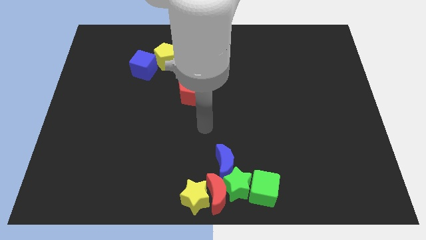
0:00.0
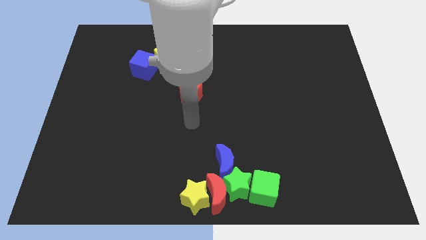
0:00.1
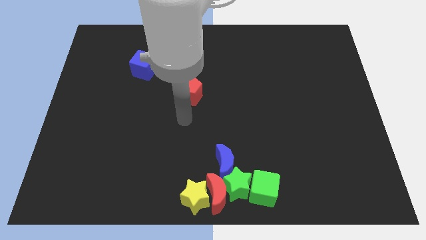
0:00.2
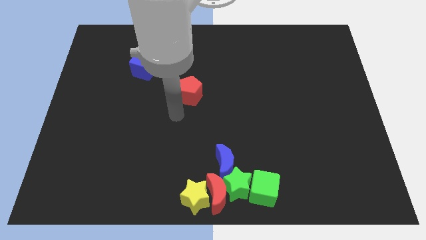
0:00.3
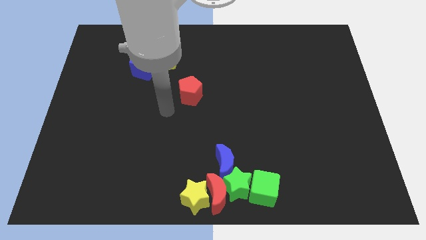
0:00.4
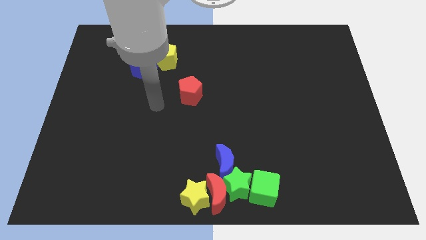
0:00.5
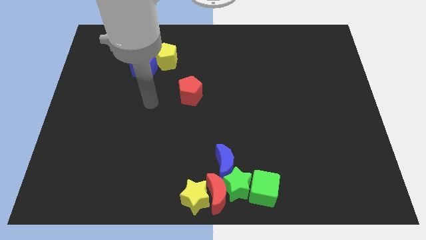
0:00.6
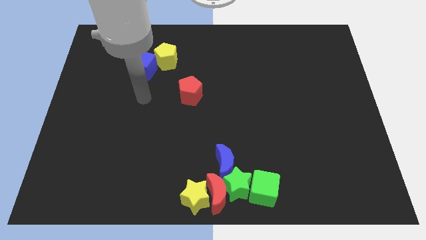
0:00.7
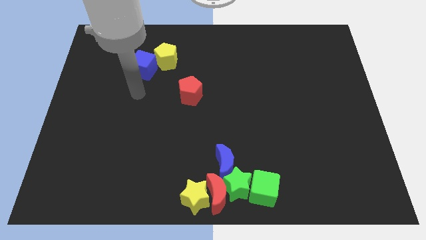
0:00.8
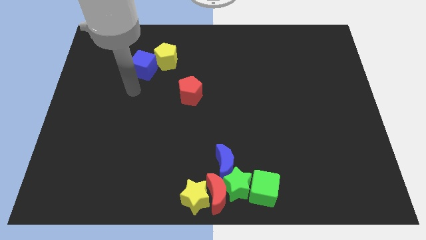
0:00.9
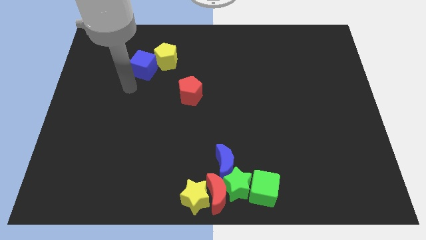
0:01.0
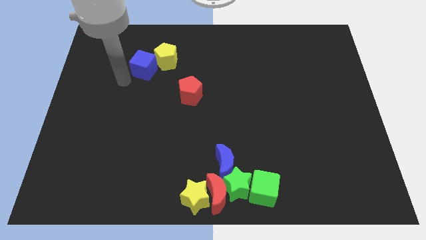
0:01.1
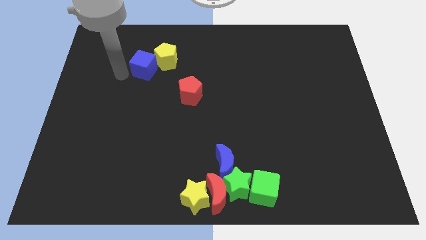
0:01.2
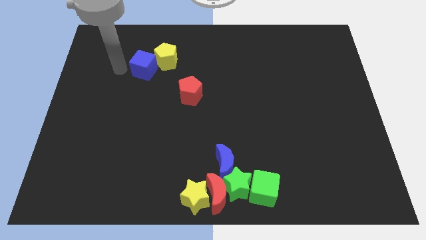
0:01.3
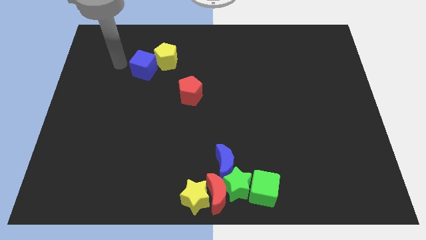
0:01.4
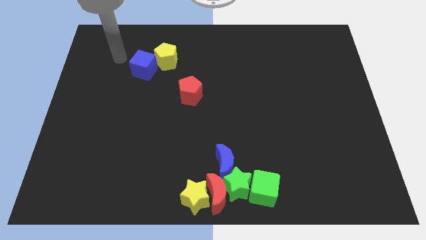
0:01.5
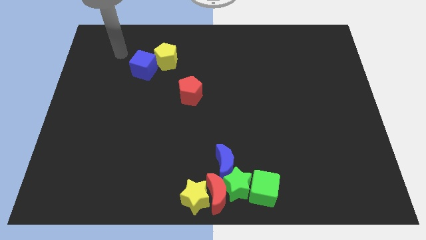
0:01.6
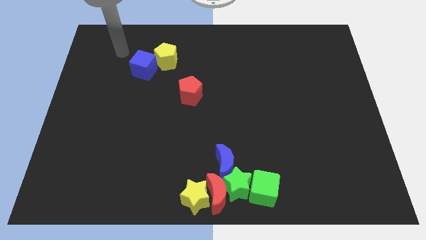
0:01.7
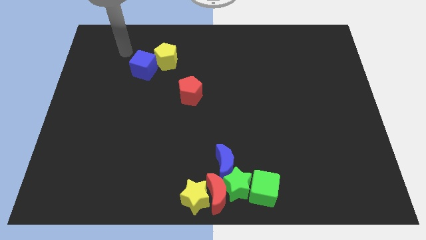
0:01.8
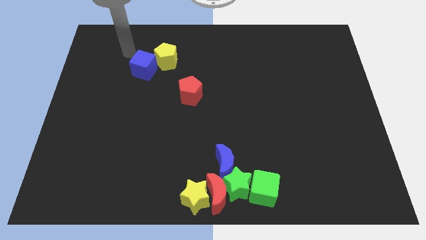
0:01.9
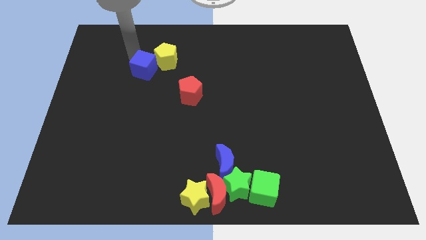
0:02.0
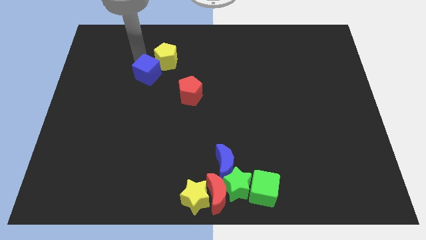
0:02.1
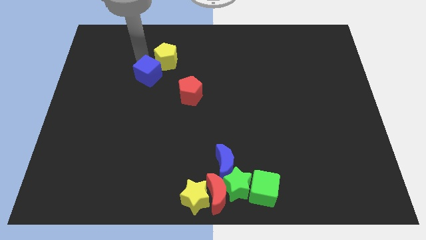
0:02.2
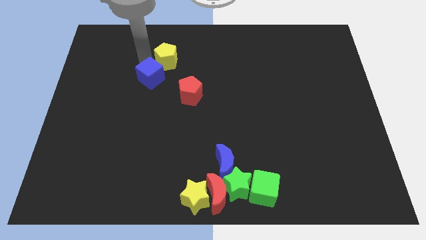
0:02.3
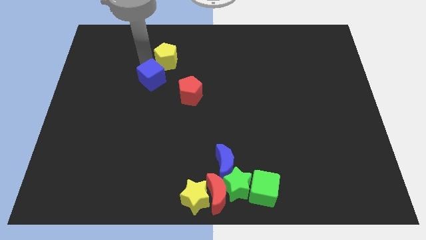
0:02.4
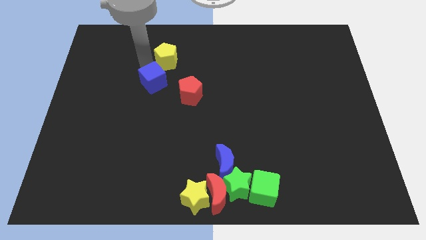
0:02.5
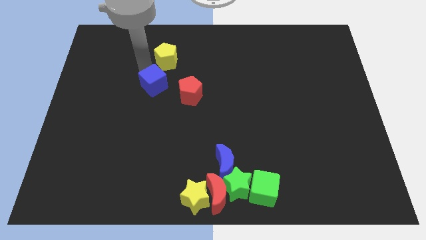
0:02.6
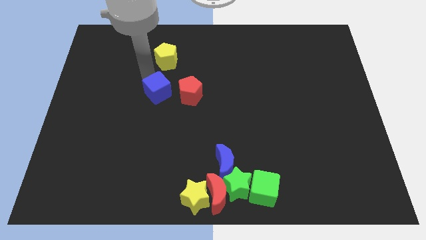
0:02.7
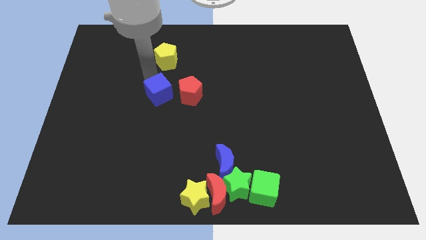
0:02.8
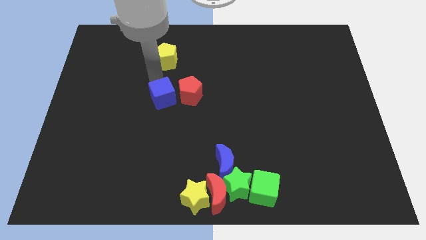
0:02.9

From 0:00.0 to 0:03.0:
move the blue cube left to the red pentagon

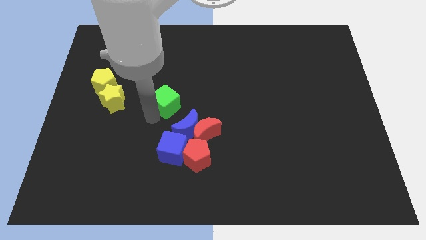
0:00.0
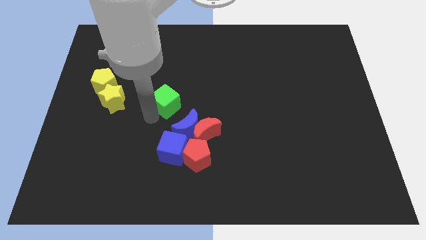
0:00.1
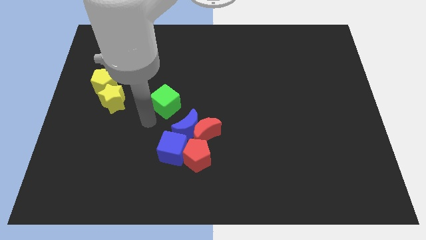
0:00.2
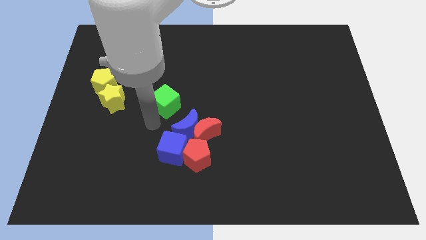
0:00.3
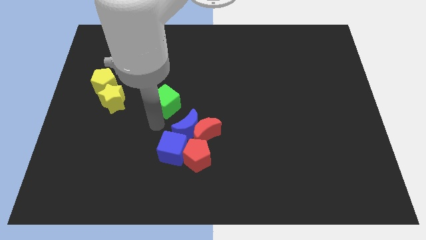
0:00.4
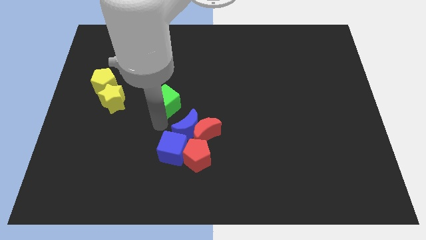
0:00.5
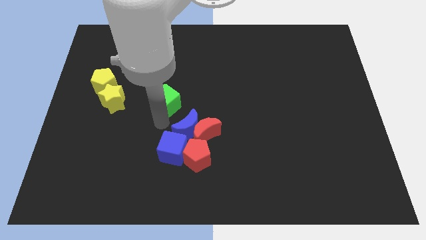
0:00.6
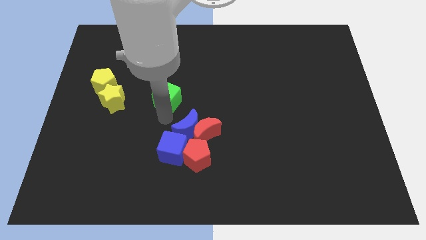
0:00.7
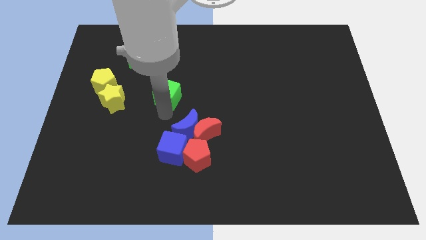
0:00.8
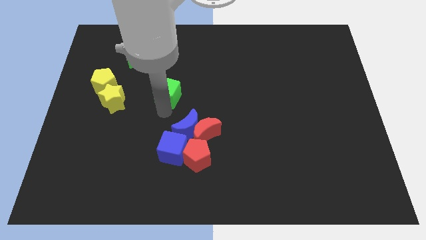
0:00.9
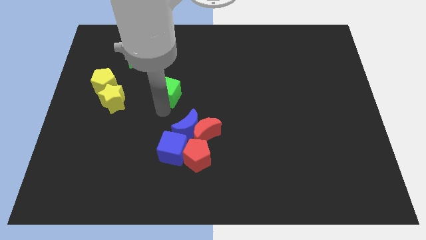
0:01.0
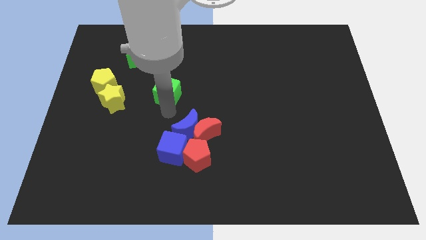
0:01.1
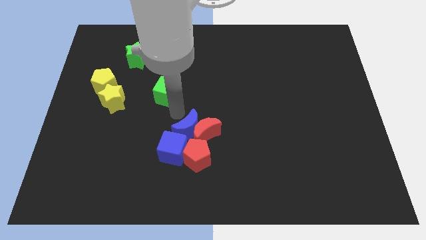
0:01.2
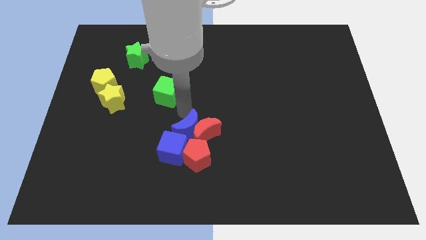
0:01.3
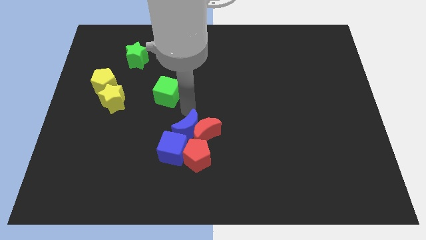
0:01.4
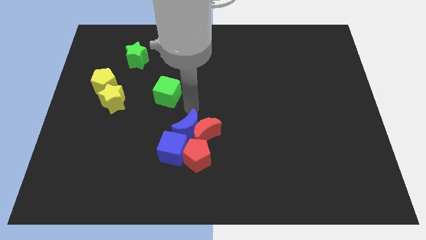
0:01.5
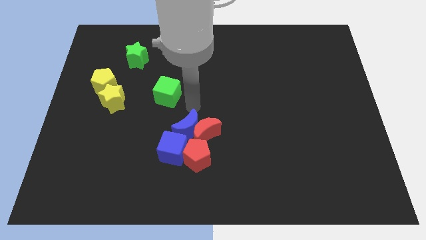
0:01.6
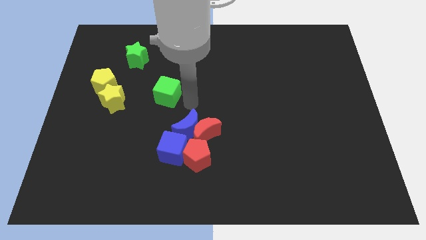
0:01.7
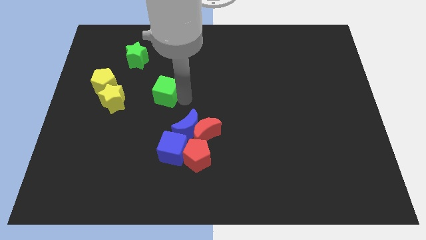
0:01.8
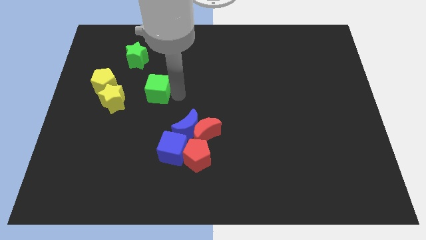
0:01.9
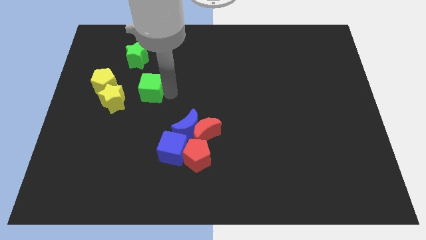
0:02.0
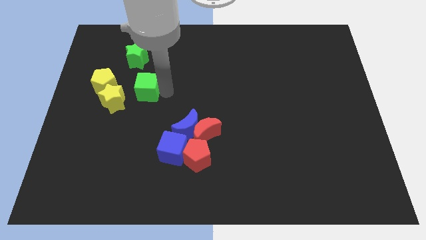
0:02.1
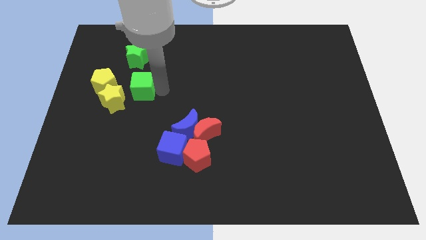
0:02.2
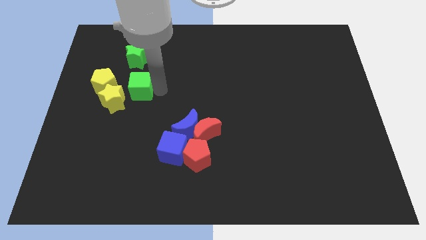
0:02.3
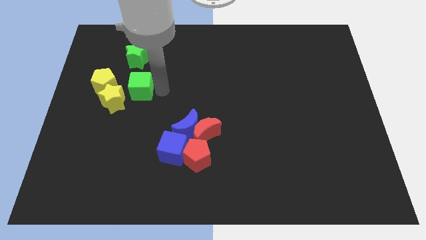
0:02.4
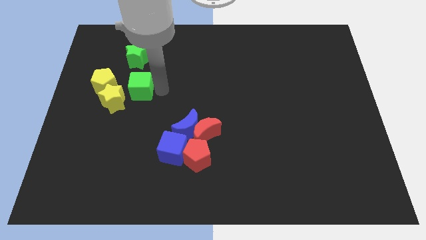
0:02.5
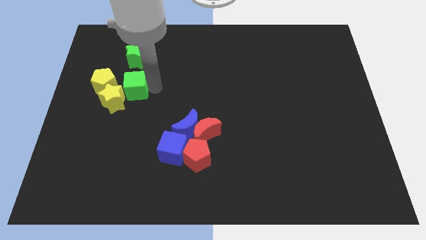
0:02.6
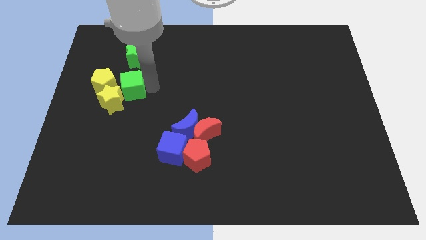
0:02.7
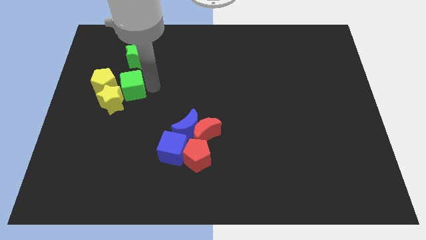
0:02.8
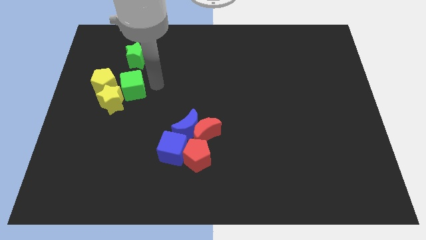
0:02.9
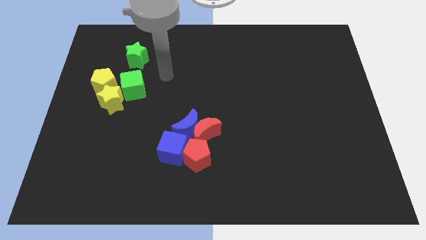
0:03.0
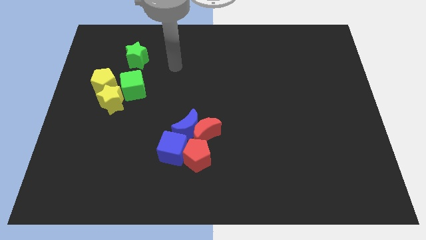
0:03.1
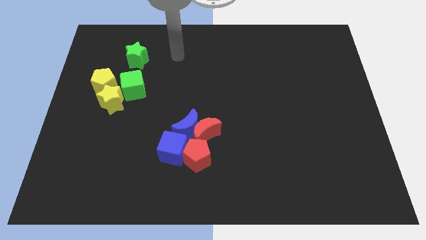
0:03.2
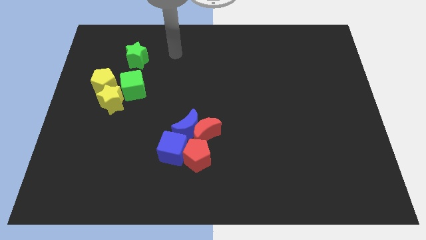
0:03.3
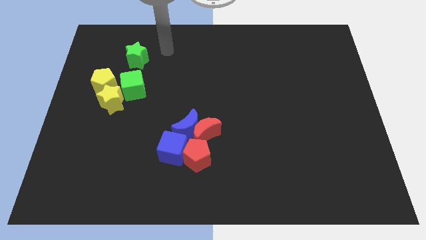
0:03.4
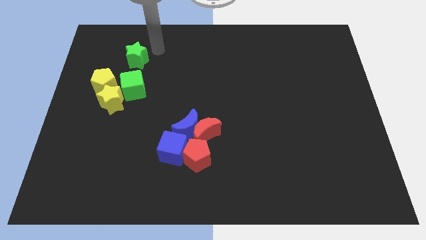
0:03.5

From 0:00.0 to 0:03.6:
place your arm toward right side of green star

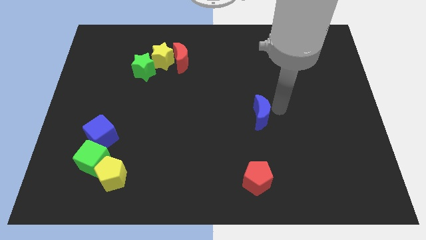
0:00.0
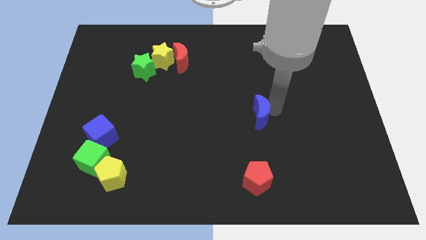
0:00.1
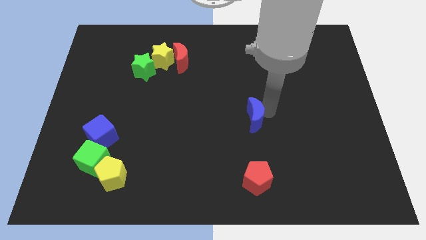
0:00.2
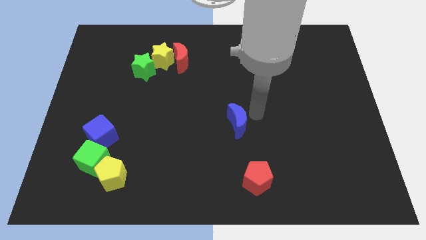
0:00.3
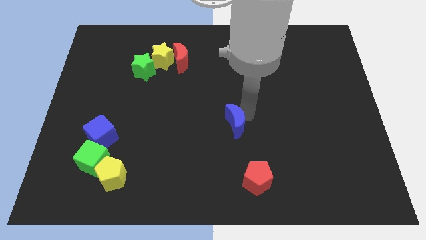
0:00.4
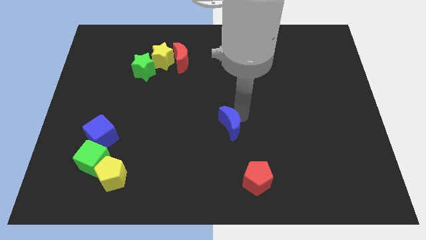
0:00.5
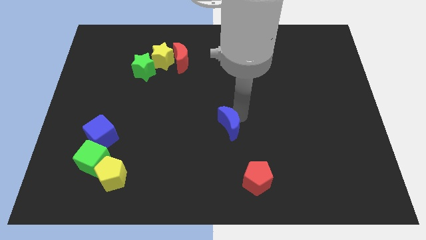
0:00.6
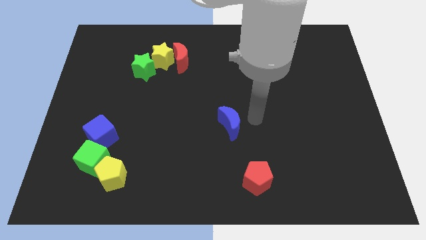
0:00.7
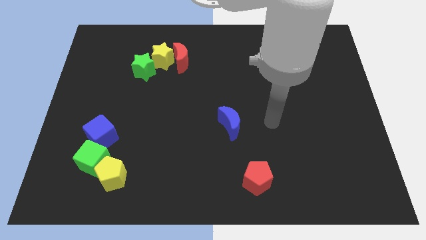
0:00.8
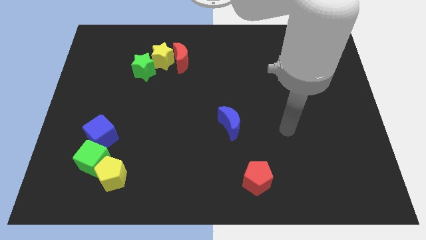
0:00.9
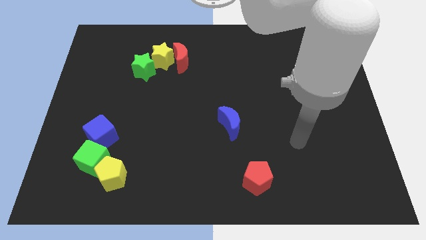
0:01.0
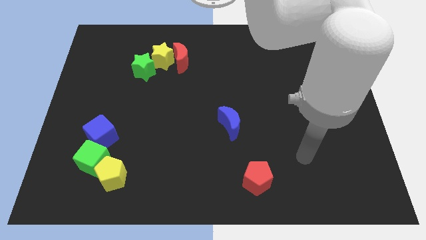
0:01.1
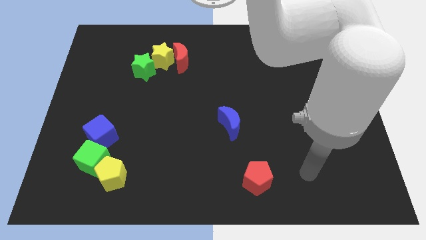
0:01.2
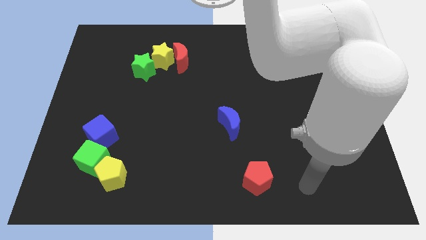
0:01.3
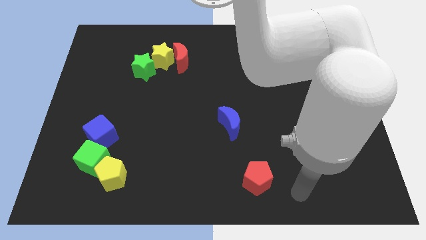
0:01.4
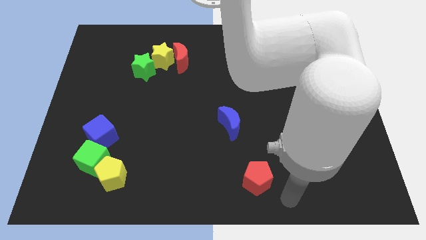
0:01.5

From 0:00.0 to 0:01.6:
put the blue crescent diagonally on the top left side of the red pentagon

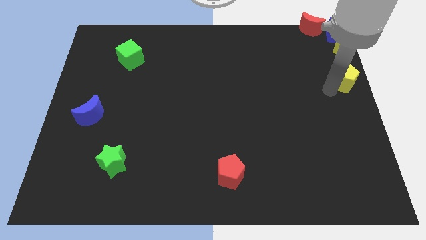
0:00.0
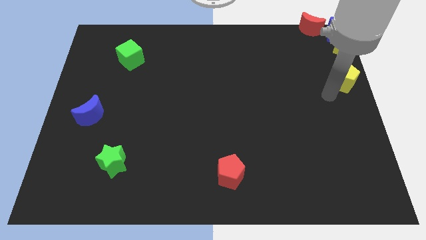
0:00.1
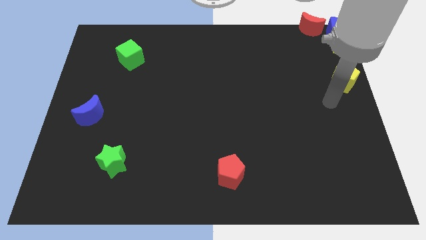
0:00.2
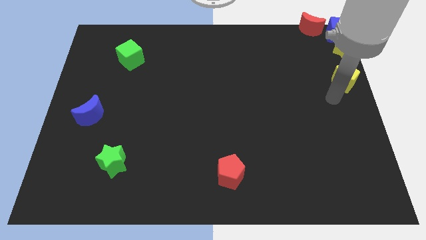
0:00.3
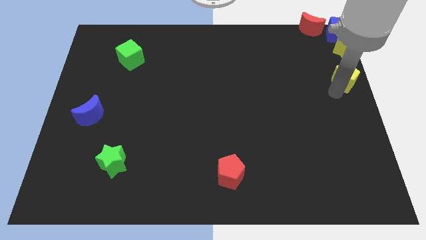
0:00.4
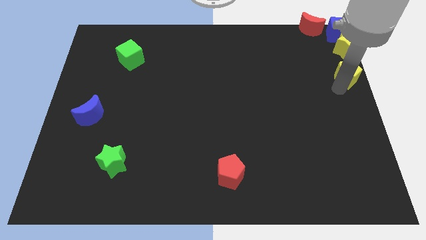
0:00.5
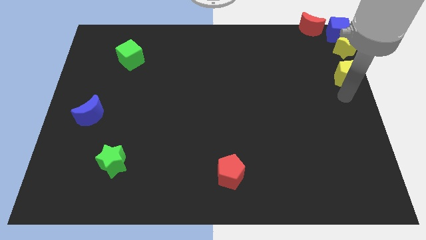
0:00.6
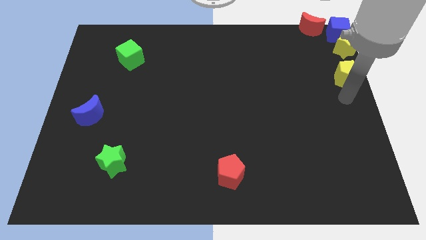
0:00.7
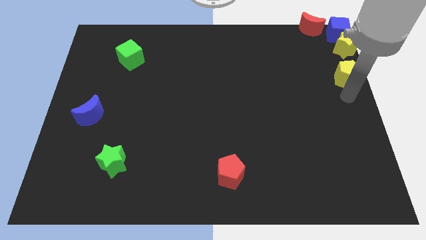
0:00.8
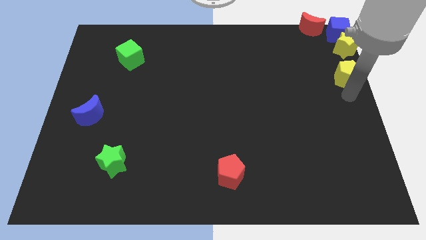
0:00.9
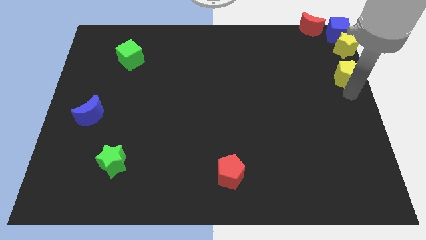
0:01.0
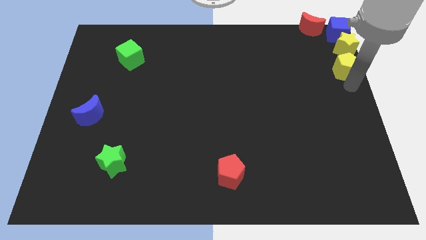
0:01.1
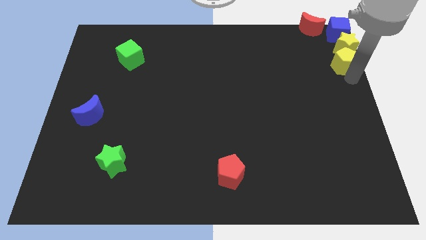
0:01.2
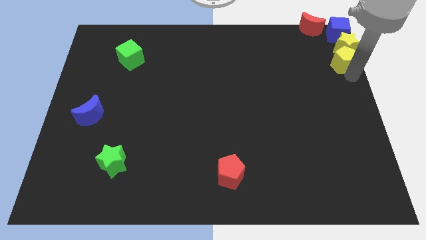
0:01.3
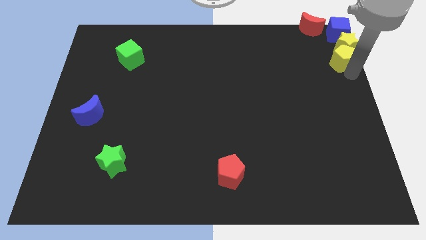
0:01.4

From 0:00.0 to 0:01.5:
move the yellow pentagon below the yellow star
